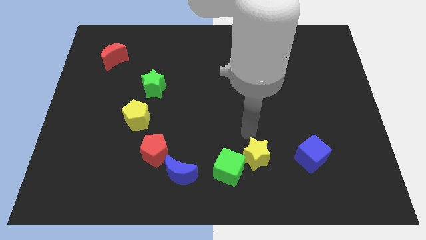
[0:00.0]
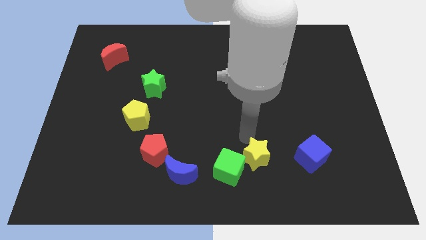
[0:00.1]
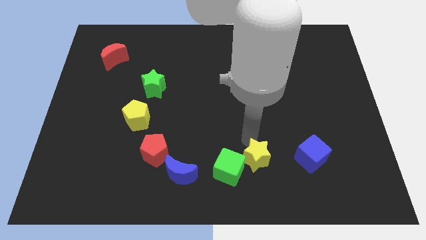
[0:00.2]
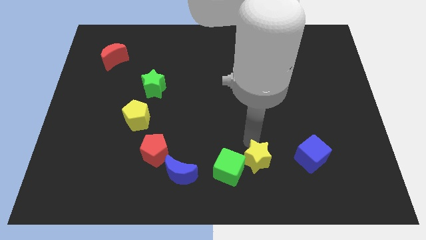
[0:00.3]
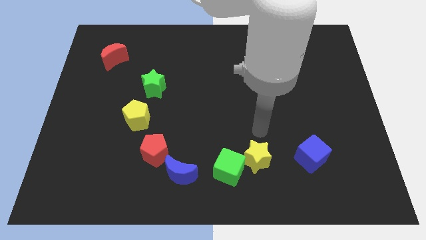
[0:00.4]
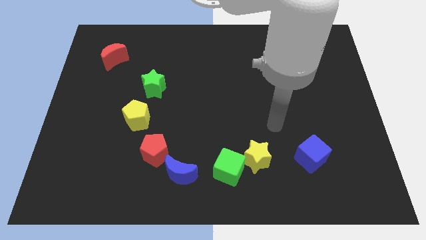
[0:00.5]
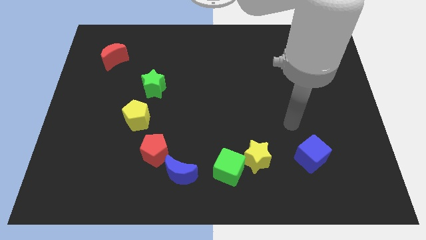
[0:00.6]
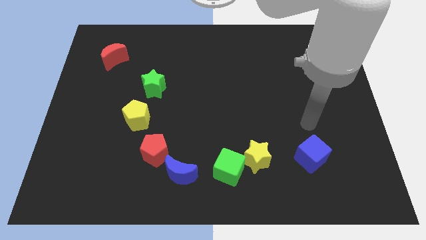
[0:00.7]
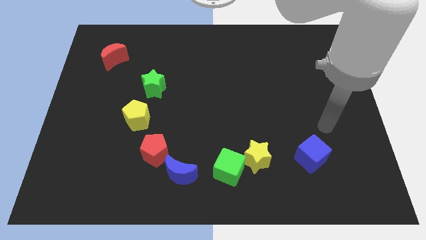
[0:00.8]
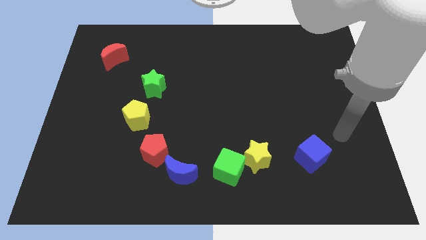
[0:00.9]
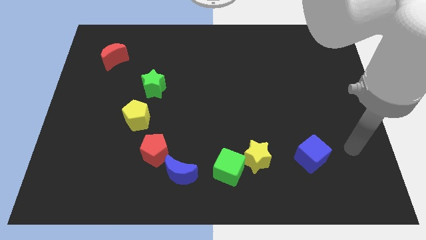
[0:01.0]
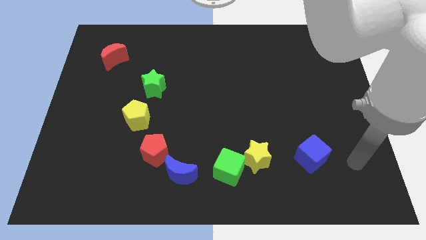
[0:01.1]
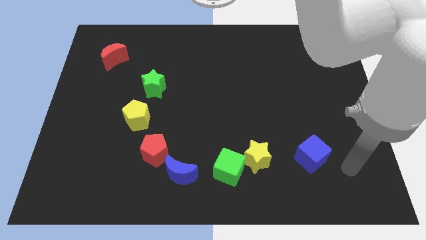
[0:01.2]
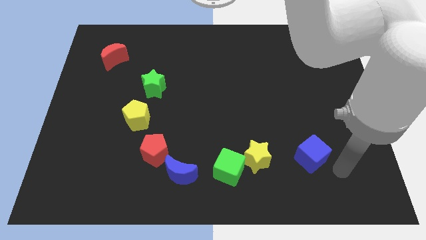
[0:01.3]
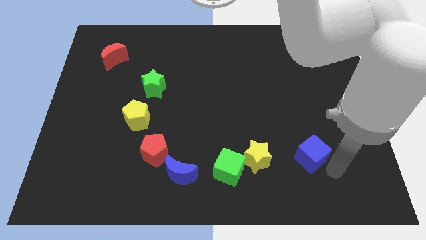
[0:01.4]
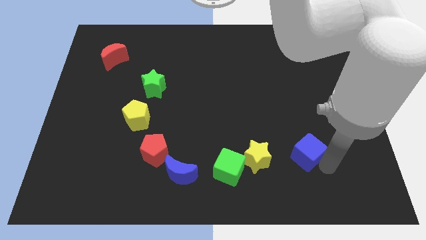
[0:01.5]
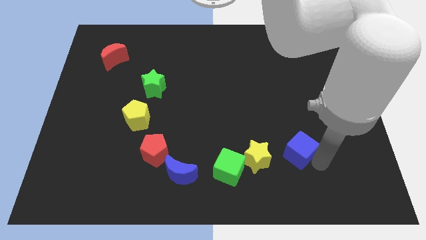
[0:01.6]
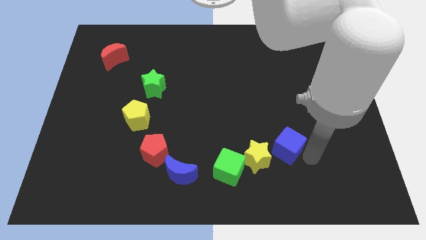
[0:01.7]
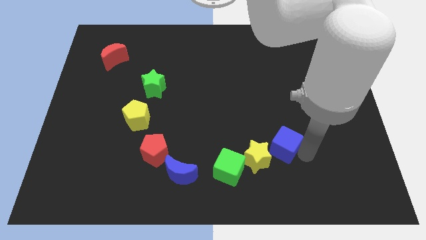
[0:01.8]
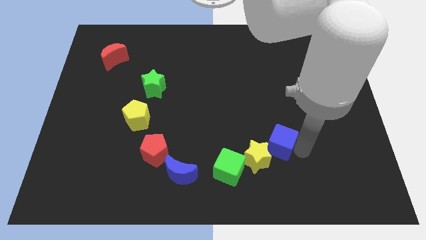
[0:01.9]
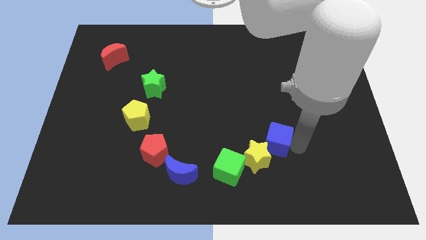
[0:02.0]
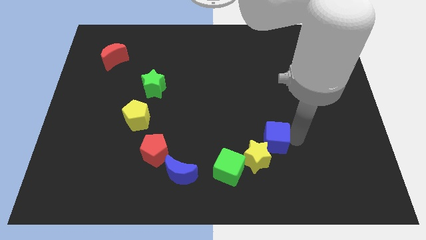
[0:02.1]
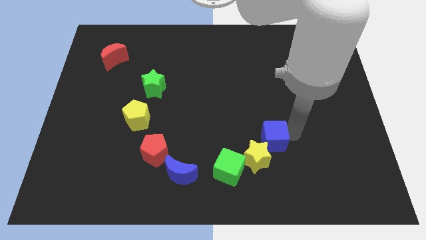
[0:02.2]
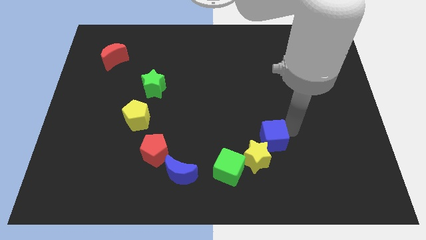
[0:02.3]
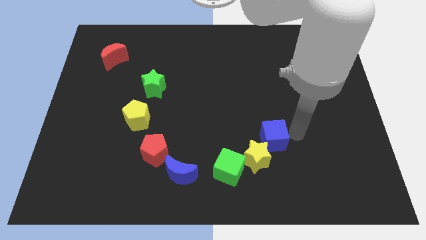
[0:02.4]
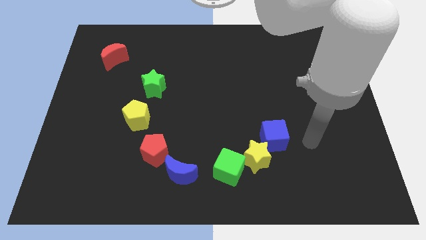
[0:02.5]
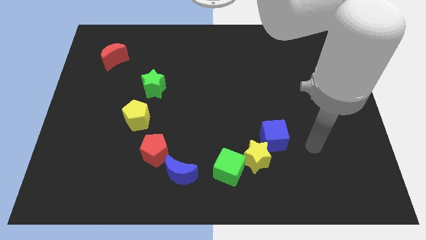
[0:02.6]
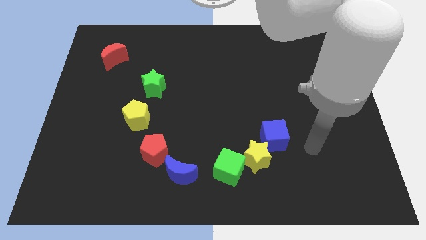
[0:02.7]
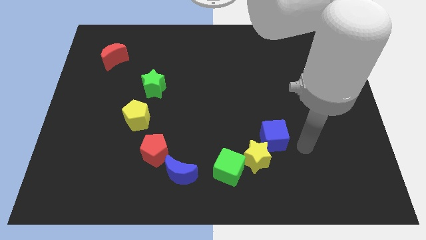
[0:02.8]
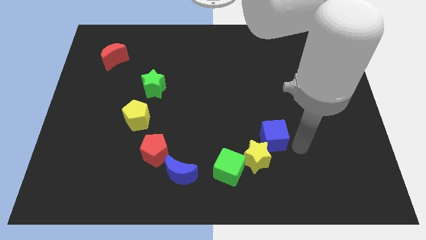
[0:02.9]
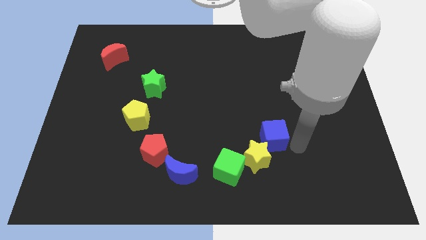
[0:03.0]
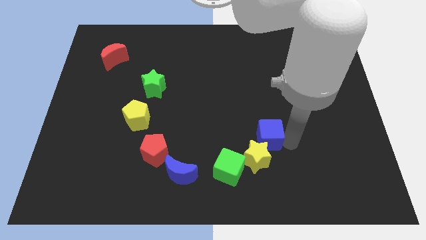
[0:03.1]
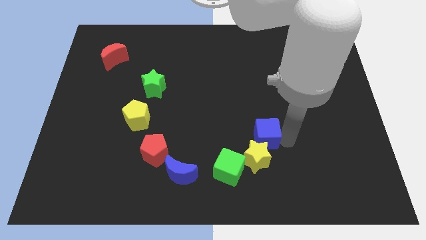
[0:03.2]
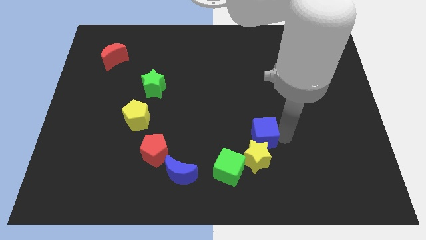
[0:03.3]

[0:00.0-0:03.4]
place the blue cube above the yellow star

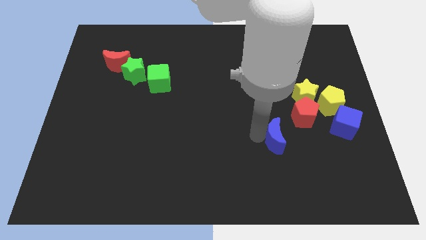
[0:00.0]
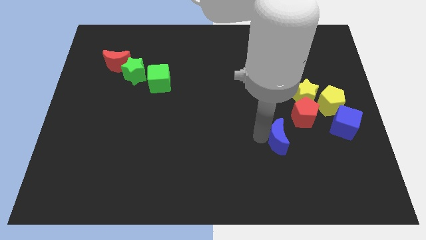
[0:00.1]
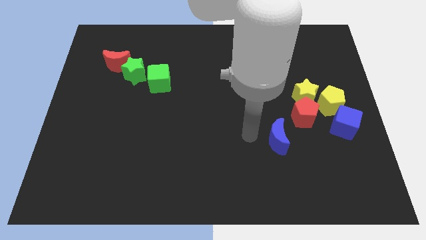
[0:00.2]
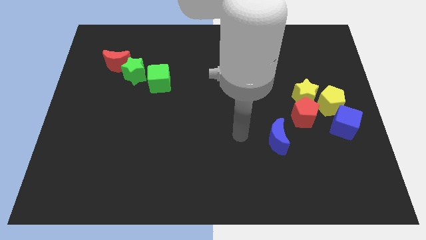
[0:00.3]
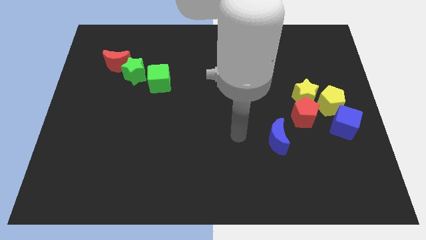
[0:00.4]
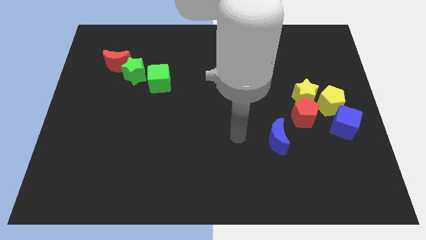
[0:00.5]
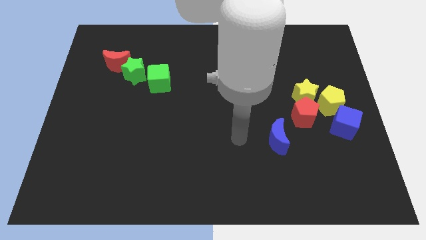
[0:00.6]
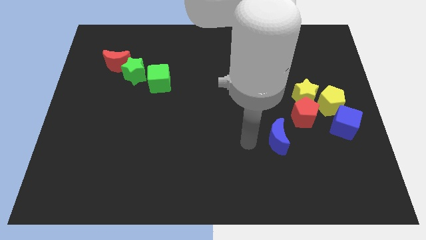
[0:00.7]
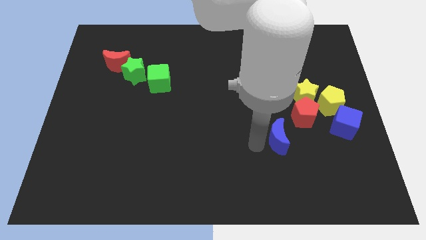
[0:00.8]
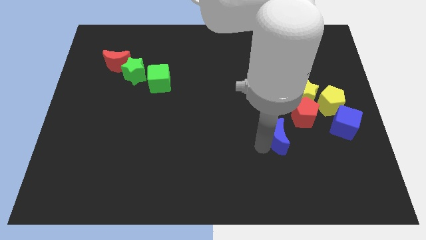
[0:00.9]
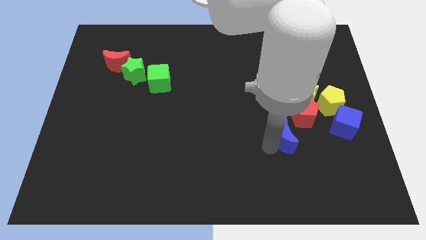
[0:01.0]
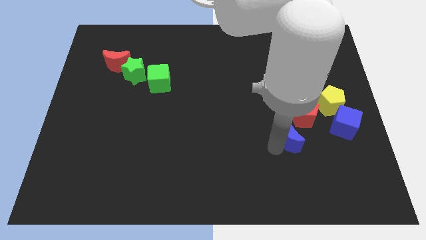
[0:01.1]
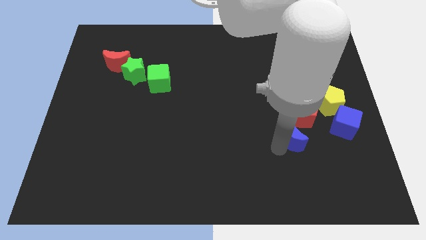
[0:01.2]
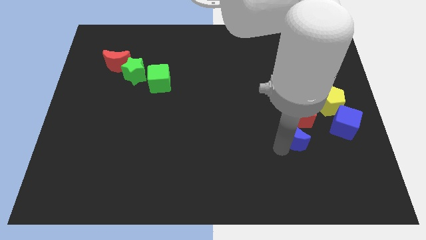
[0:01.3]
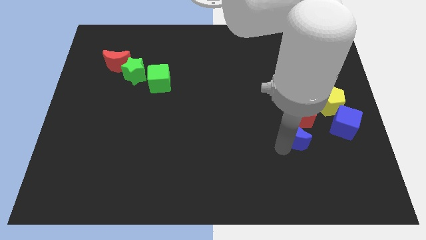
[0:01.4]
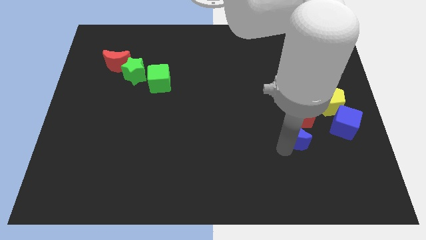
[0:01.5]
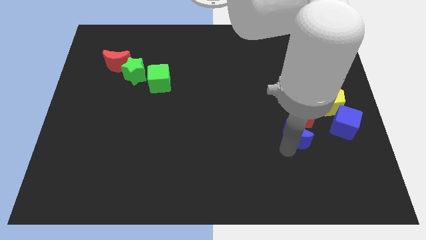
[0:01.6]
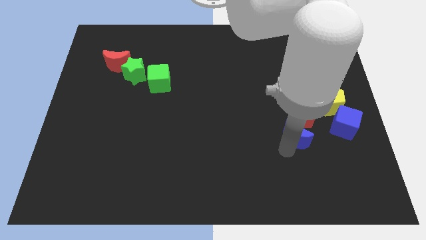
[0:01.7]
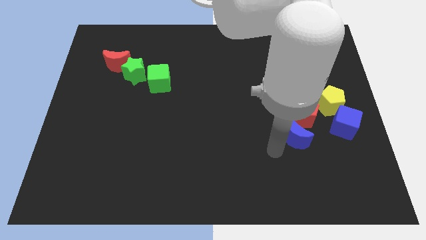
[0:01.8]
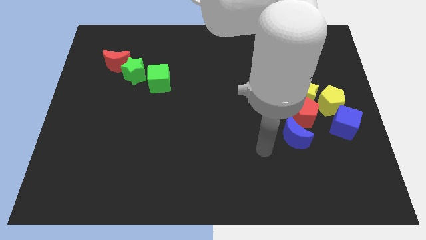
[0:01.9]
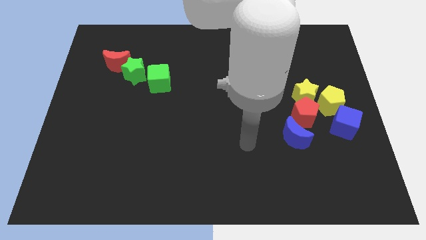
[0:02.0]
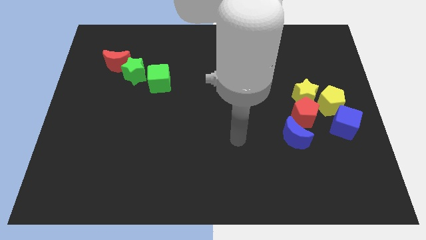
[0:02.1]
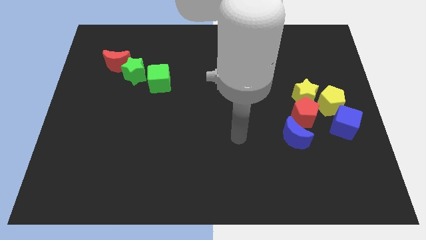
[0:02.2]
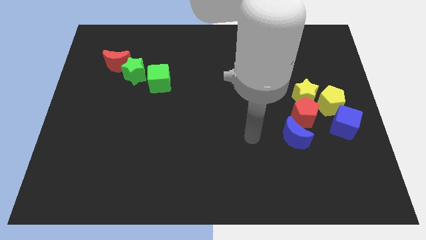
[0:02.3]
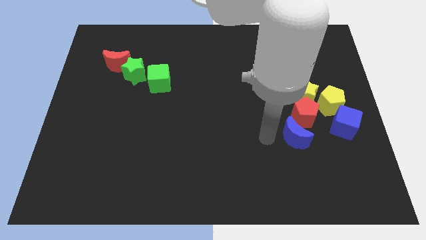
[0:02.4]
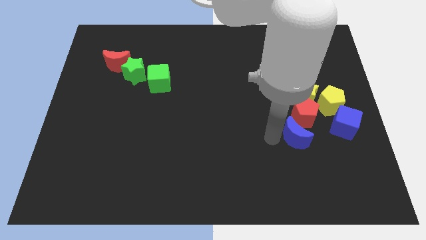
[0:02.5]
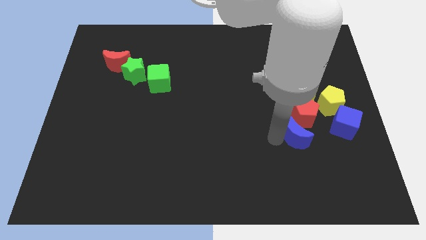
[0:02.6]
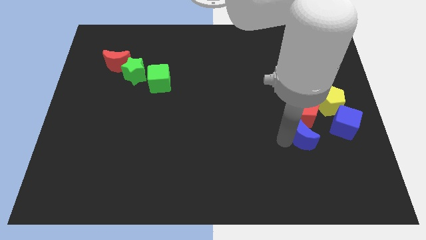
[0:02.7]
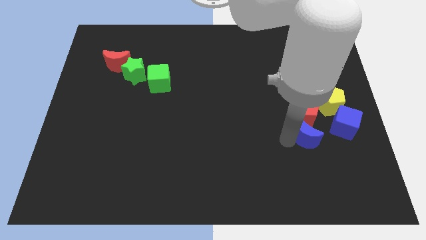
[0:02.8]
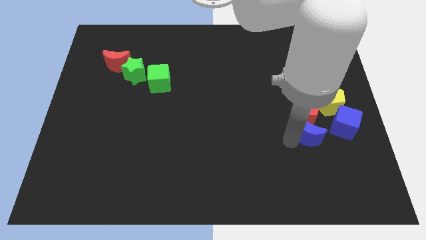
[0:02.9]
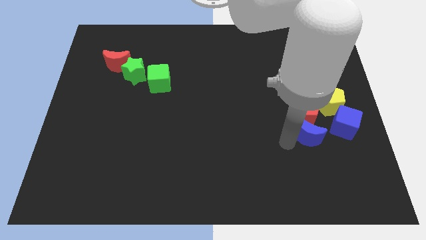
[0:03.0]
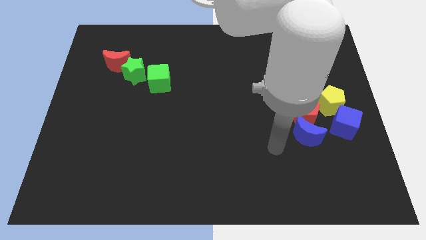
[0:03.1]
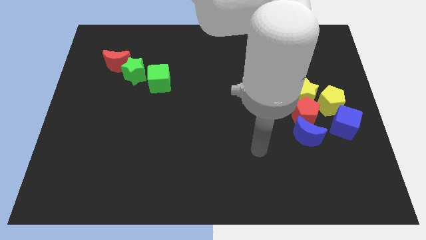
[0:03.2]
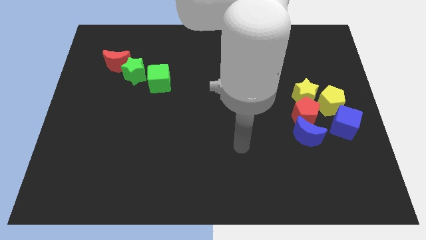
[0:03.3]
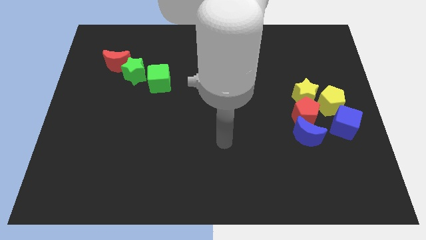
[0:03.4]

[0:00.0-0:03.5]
move blue crescent below red pentagon

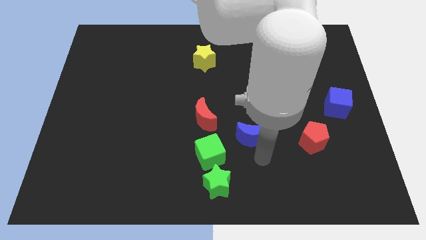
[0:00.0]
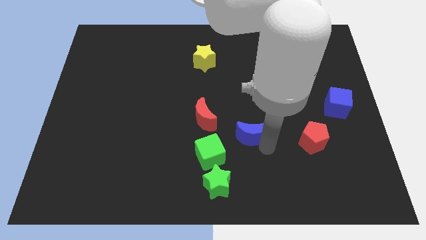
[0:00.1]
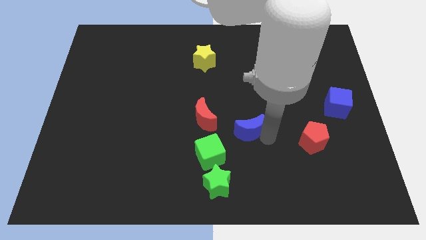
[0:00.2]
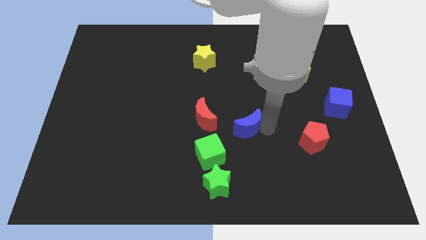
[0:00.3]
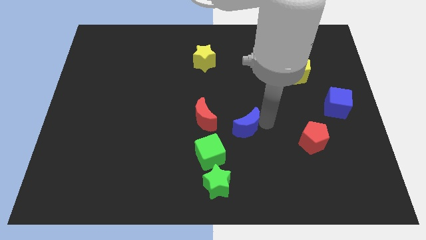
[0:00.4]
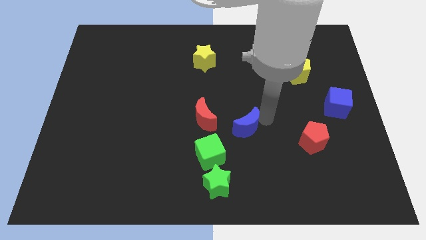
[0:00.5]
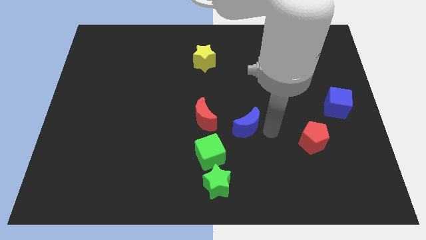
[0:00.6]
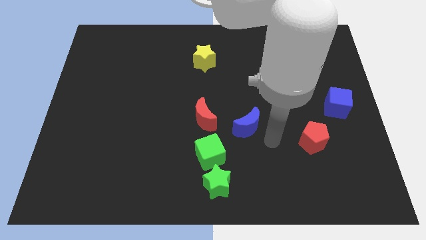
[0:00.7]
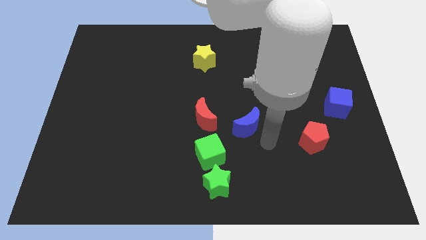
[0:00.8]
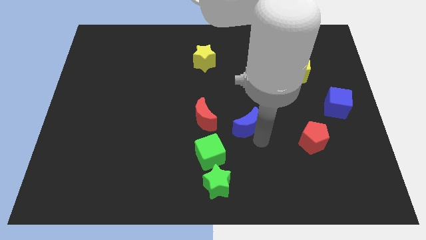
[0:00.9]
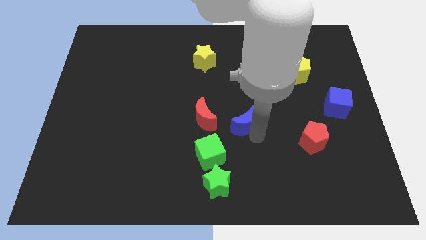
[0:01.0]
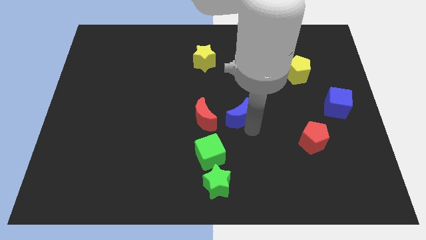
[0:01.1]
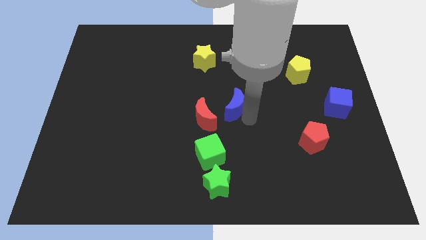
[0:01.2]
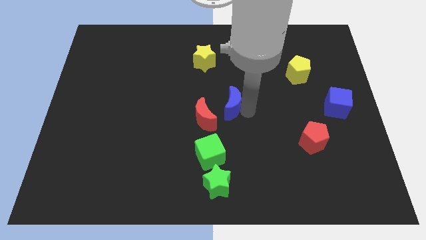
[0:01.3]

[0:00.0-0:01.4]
place the blue crescent diagonally below the yellow star

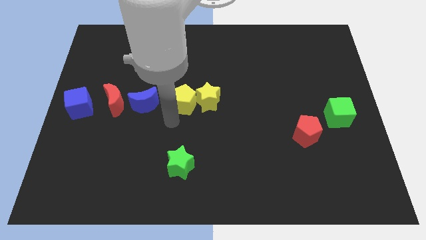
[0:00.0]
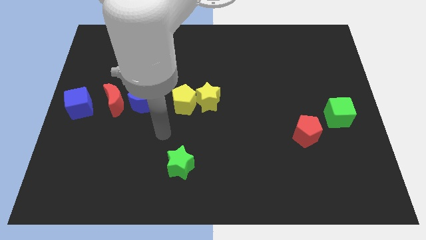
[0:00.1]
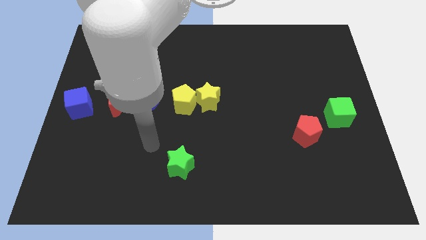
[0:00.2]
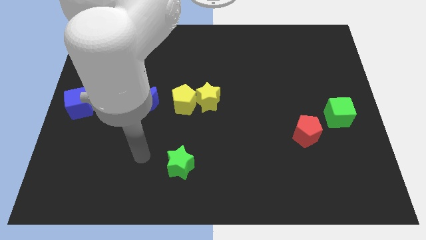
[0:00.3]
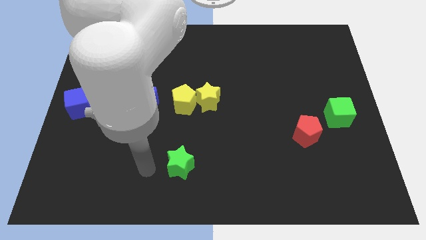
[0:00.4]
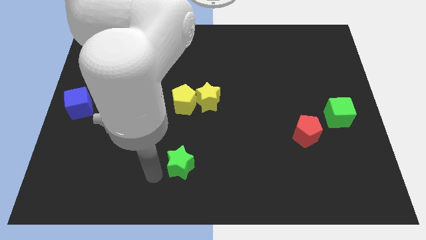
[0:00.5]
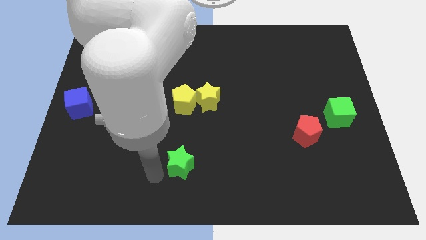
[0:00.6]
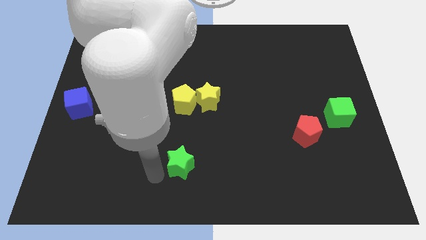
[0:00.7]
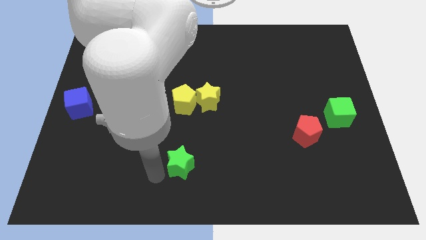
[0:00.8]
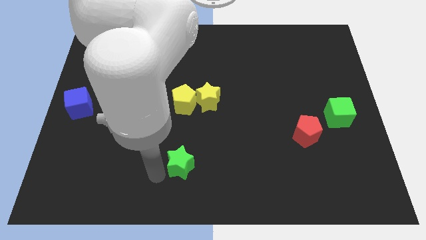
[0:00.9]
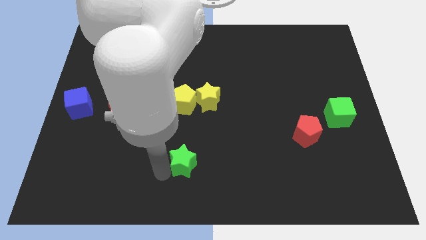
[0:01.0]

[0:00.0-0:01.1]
move your hand towards the left side of the green star
